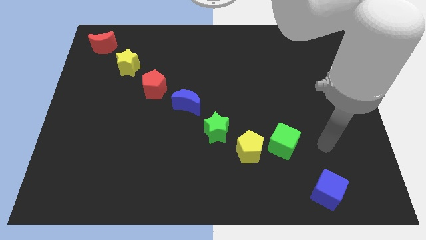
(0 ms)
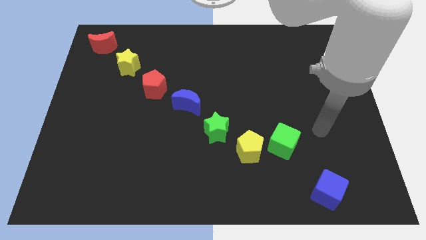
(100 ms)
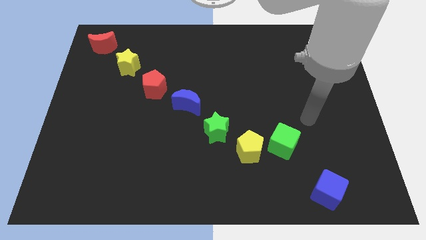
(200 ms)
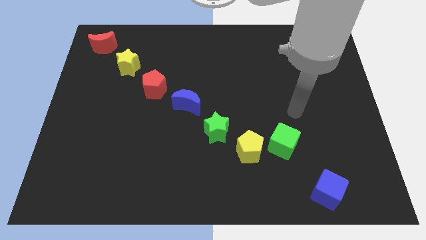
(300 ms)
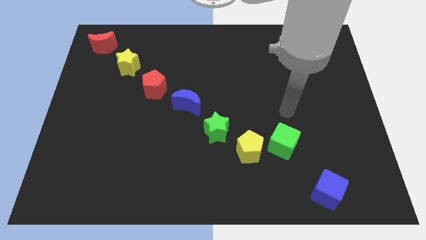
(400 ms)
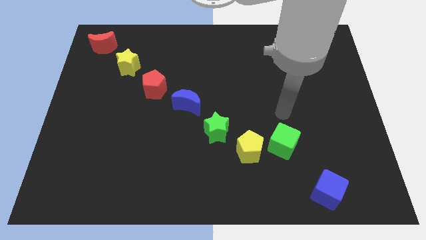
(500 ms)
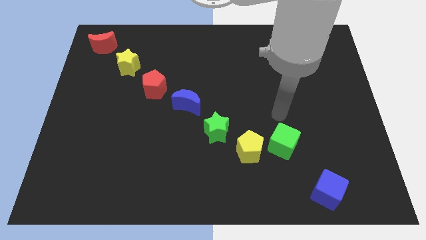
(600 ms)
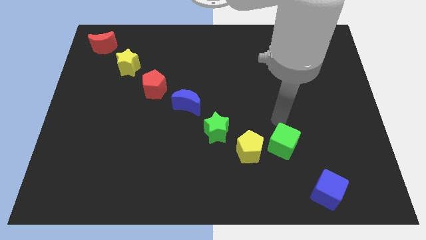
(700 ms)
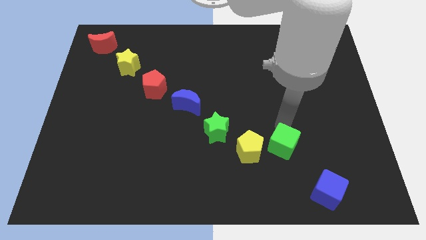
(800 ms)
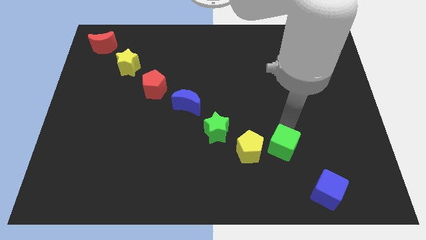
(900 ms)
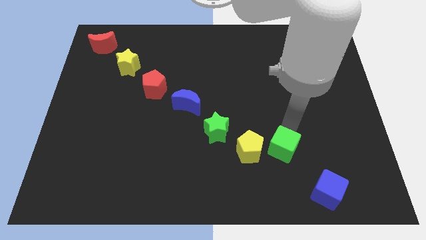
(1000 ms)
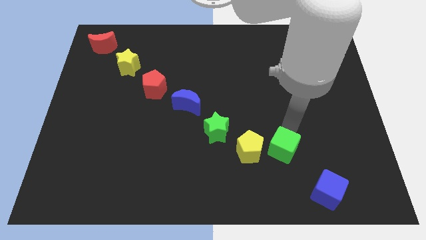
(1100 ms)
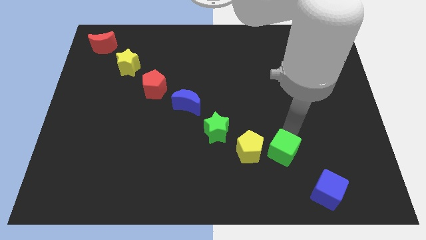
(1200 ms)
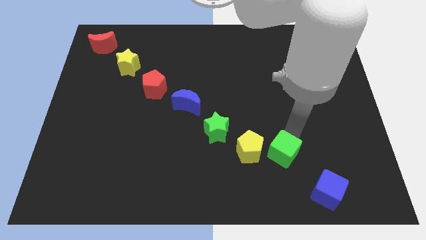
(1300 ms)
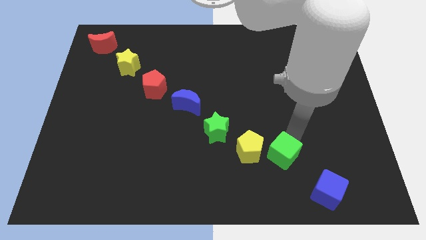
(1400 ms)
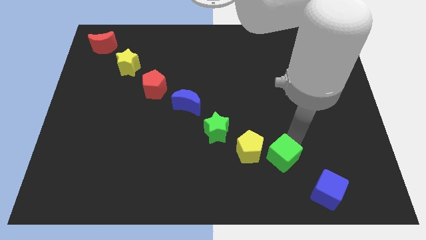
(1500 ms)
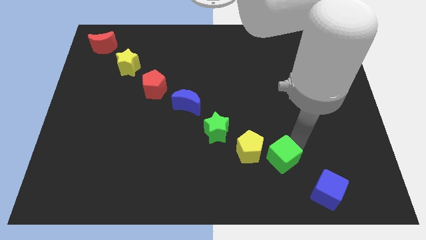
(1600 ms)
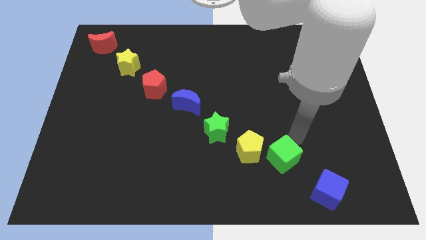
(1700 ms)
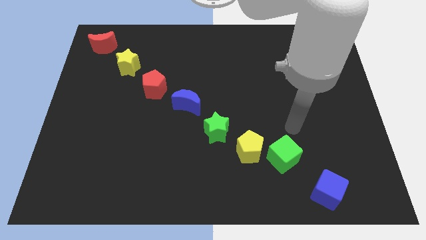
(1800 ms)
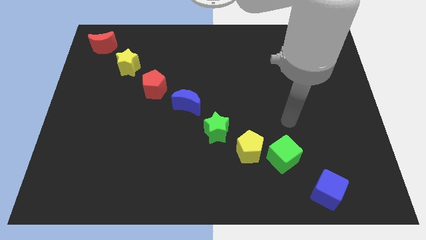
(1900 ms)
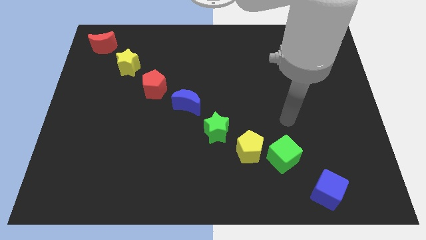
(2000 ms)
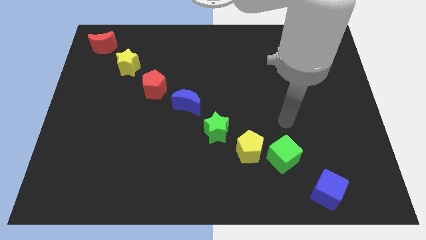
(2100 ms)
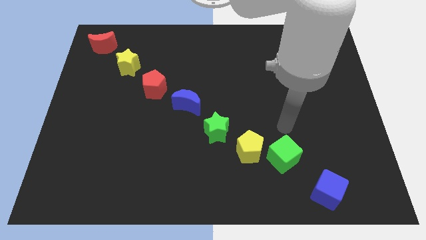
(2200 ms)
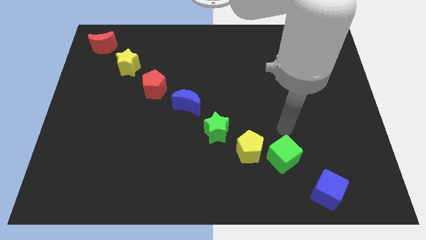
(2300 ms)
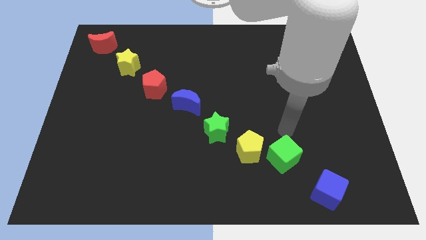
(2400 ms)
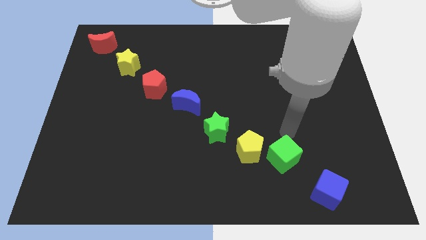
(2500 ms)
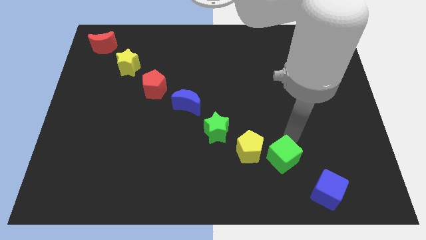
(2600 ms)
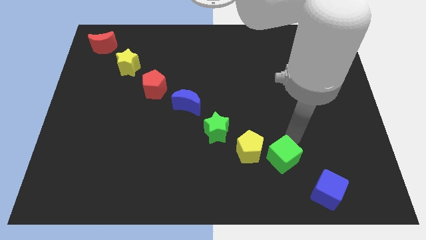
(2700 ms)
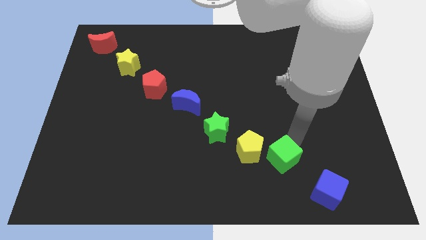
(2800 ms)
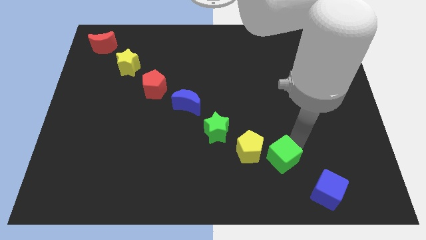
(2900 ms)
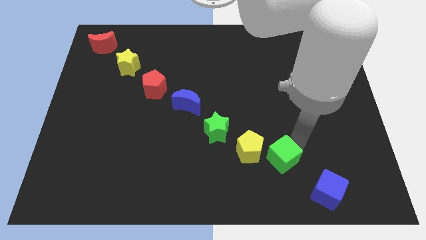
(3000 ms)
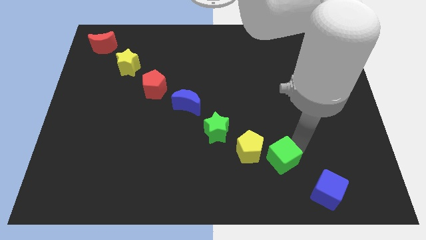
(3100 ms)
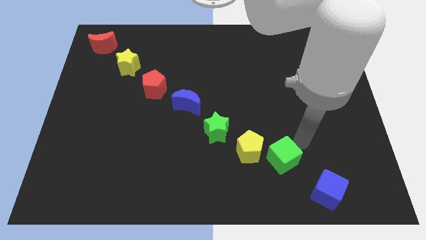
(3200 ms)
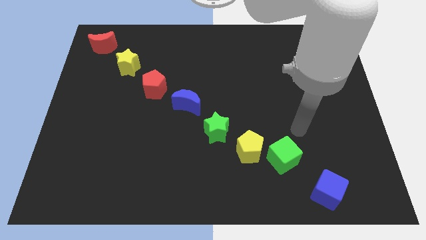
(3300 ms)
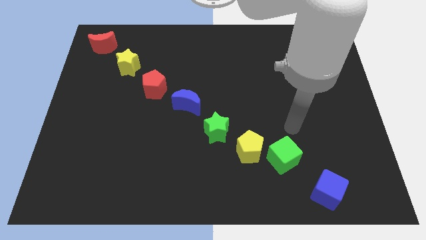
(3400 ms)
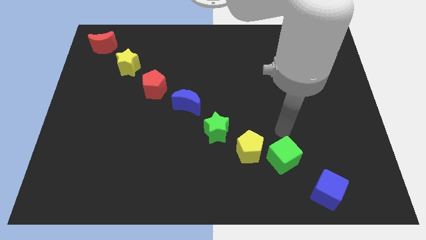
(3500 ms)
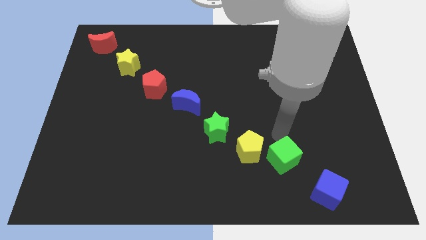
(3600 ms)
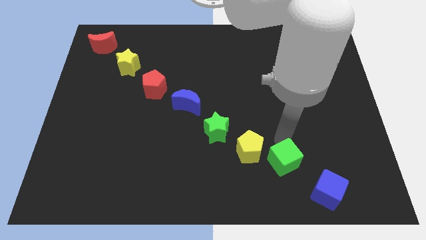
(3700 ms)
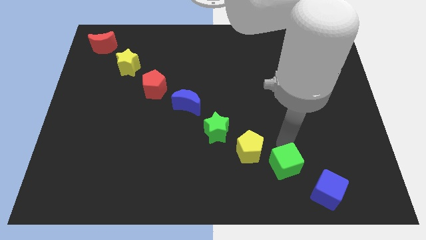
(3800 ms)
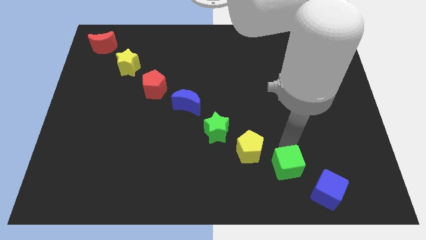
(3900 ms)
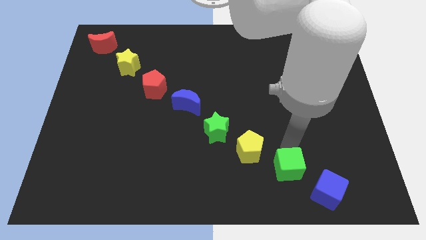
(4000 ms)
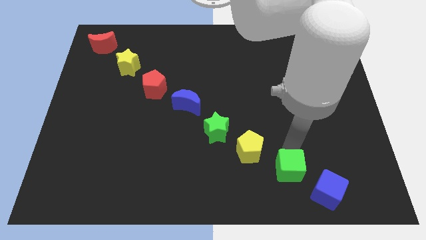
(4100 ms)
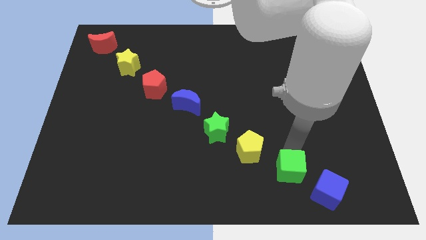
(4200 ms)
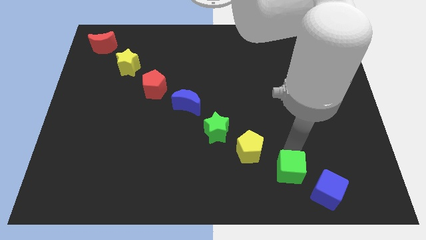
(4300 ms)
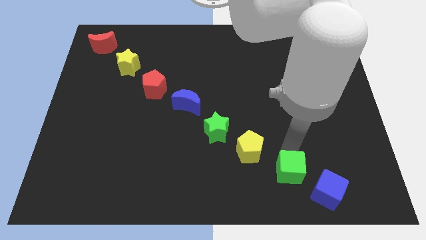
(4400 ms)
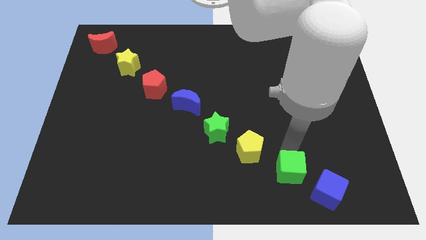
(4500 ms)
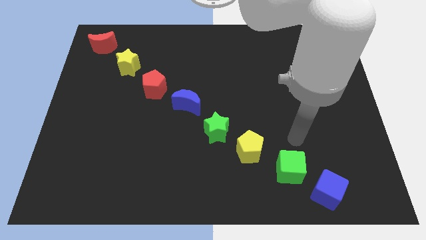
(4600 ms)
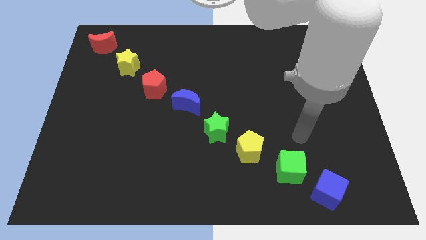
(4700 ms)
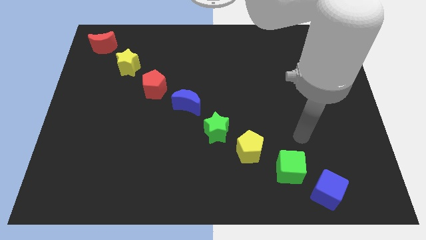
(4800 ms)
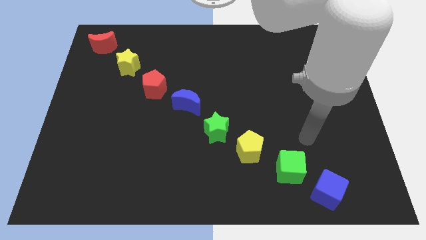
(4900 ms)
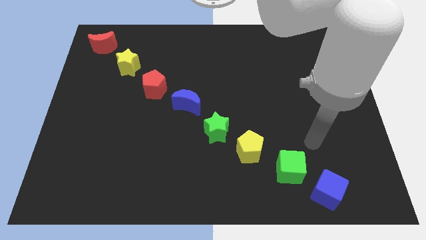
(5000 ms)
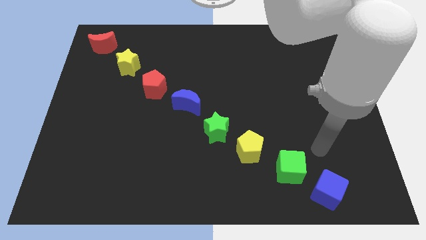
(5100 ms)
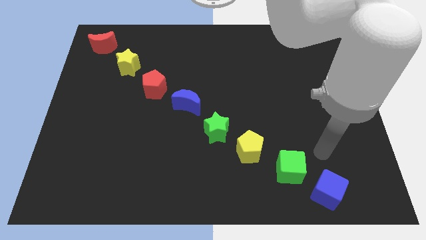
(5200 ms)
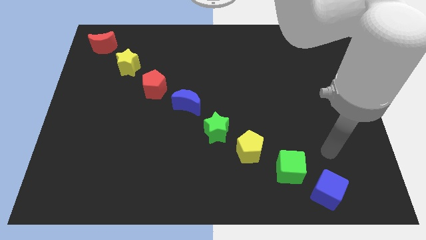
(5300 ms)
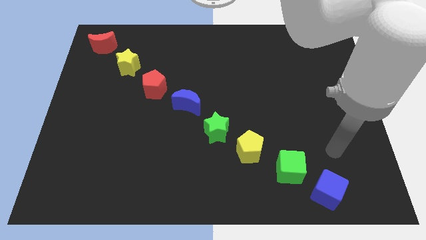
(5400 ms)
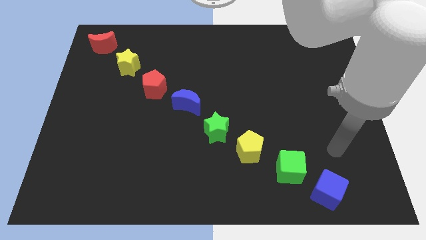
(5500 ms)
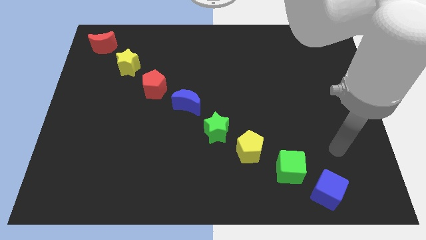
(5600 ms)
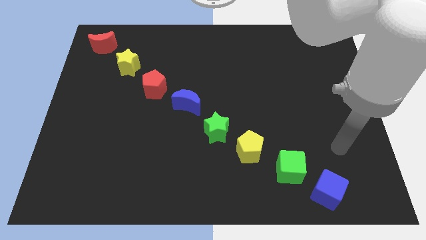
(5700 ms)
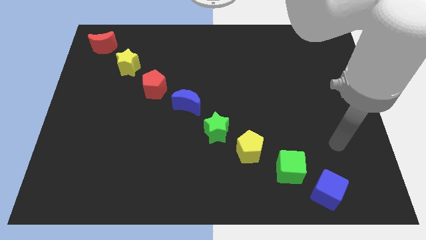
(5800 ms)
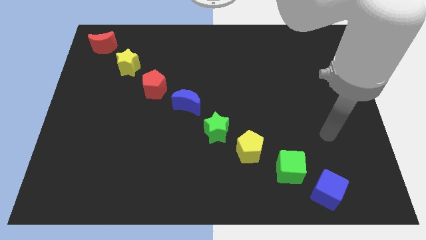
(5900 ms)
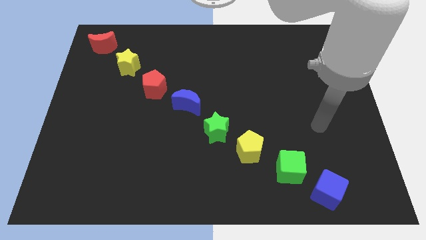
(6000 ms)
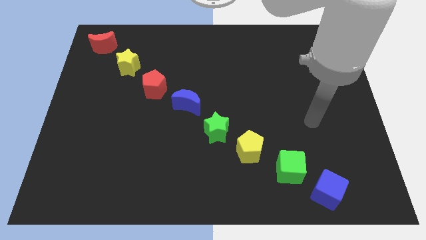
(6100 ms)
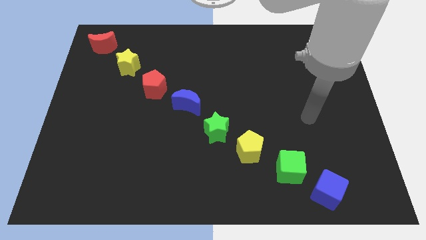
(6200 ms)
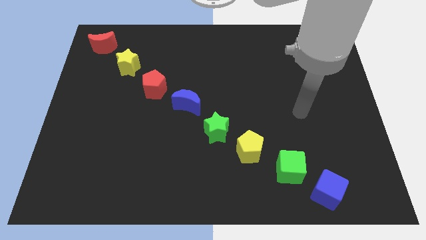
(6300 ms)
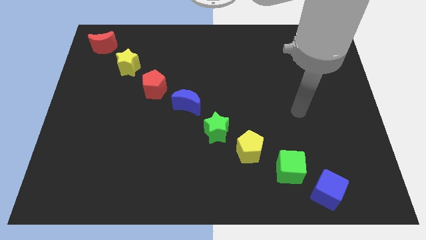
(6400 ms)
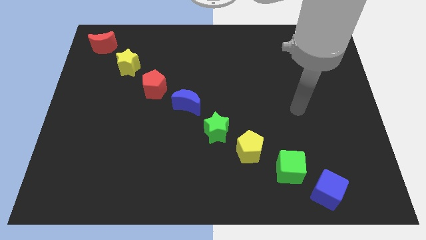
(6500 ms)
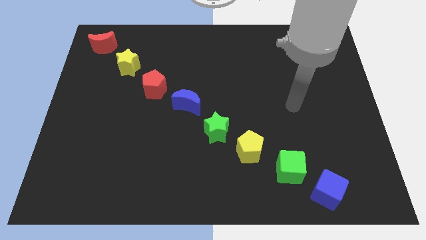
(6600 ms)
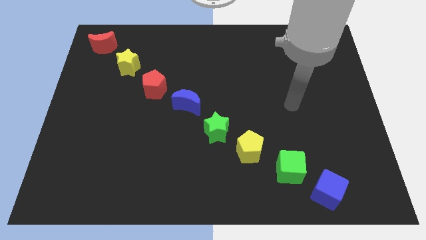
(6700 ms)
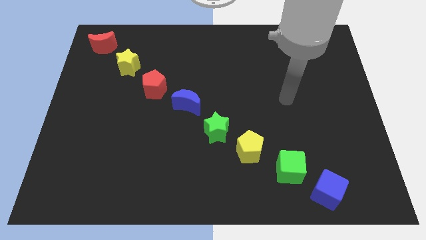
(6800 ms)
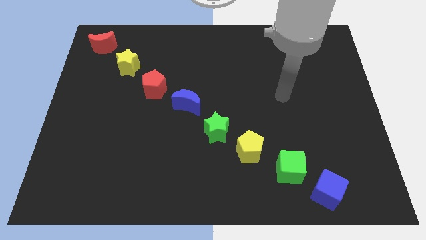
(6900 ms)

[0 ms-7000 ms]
adjust the green cube to form a diagonal line with a group of blocks

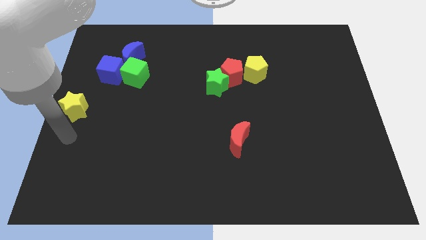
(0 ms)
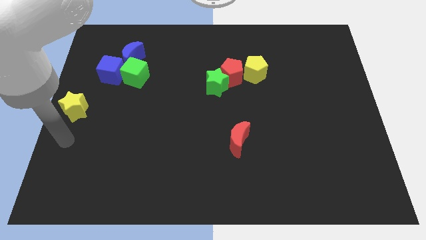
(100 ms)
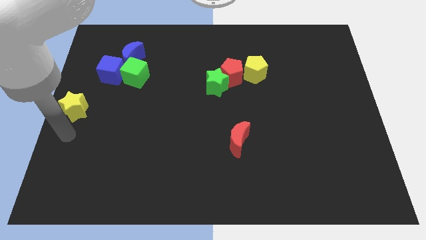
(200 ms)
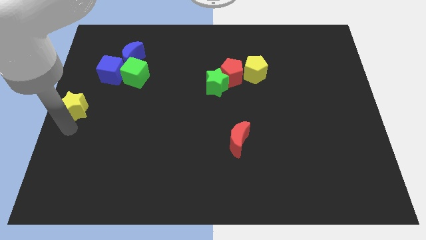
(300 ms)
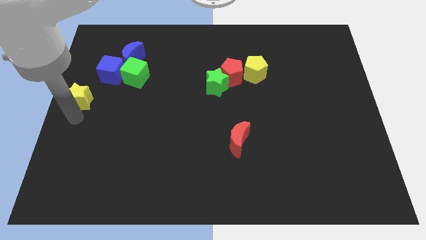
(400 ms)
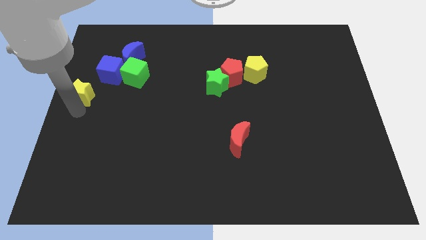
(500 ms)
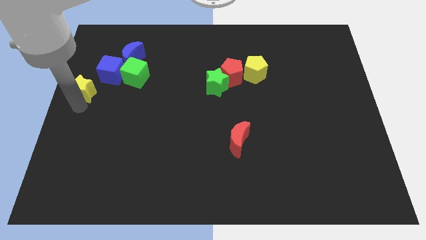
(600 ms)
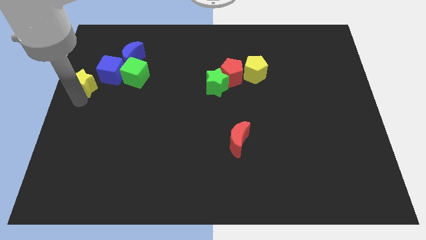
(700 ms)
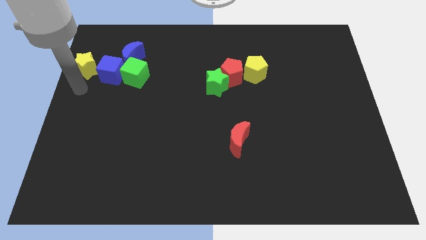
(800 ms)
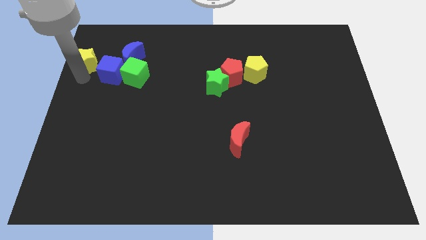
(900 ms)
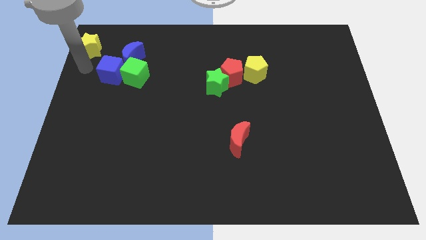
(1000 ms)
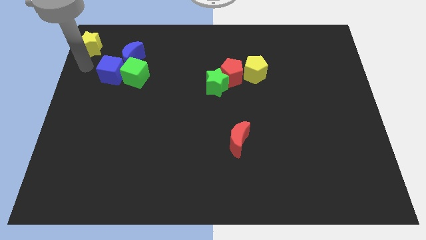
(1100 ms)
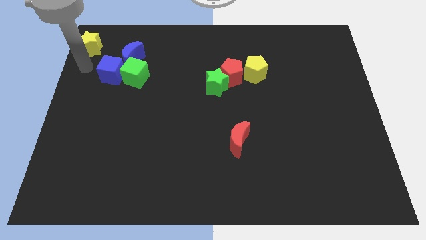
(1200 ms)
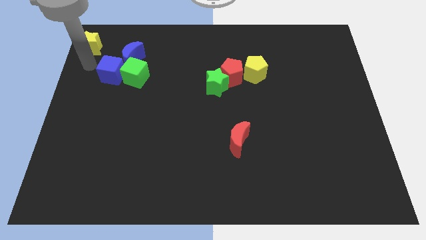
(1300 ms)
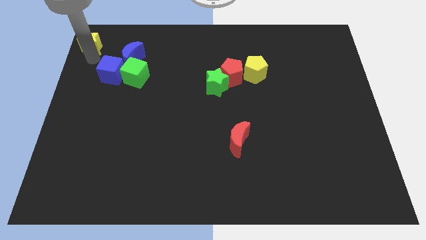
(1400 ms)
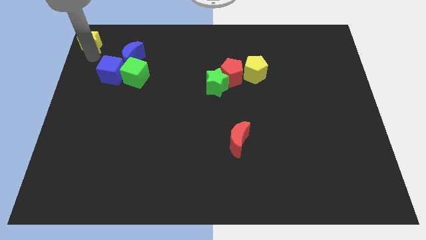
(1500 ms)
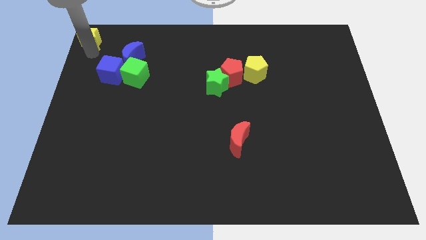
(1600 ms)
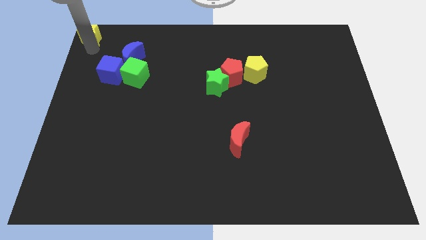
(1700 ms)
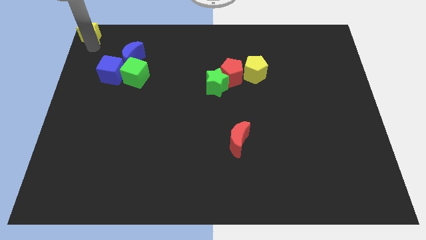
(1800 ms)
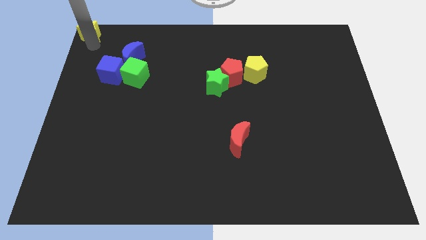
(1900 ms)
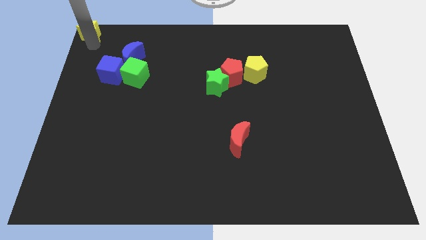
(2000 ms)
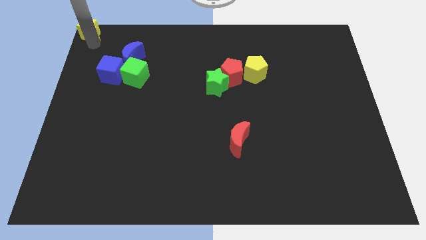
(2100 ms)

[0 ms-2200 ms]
drag the yellow star to the top left corner of the board

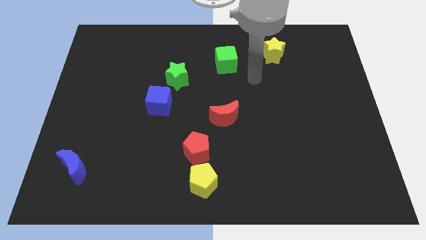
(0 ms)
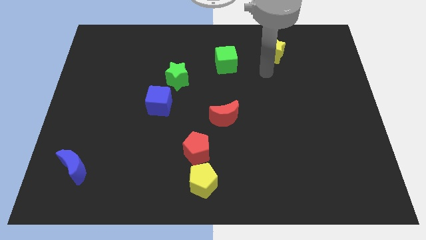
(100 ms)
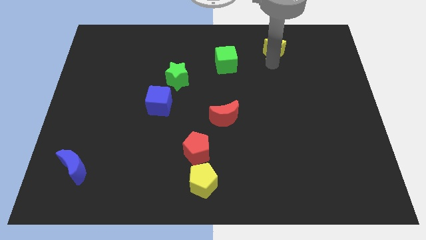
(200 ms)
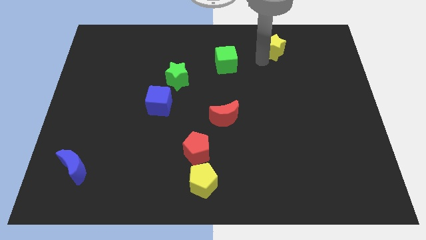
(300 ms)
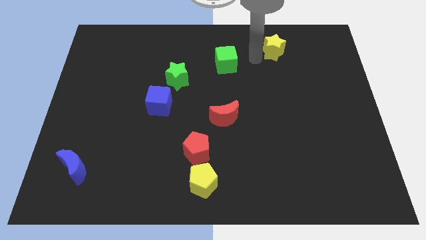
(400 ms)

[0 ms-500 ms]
move the yellow star slightly to the top right of the board
